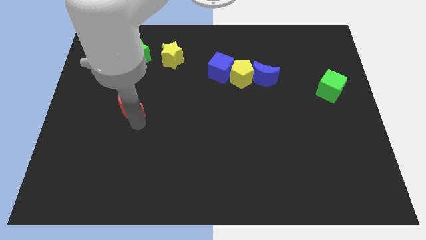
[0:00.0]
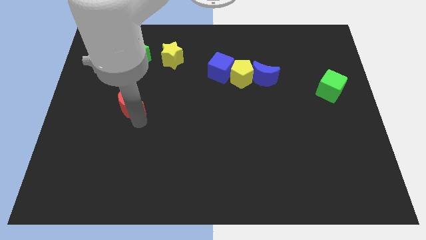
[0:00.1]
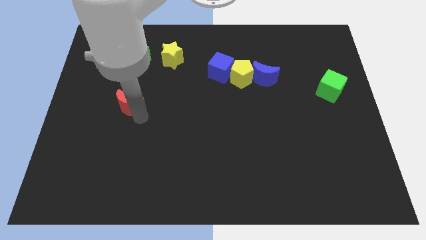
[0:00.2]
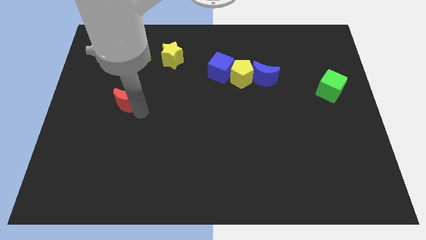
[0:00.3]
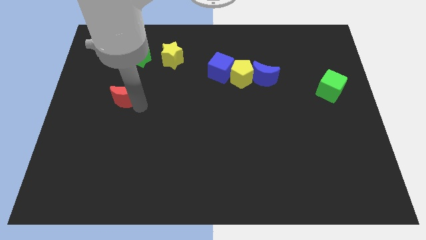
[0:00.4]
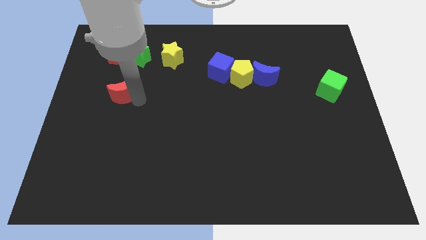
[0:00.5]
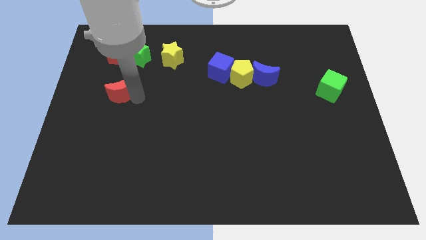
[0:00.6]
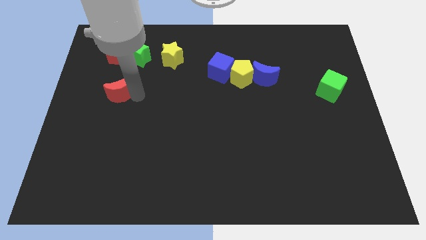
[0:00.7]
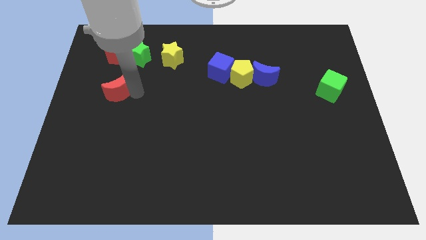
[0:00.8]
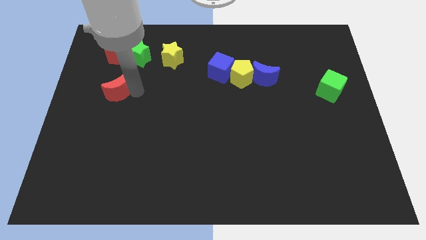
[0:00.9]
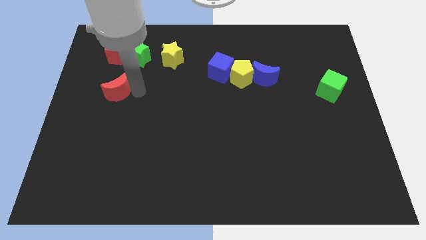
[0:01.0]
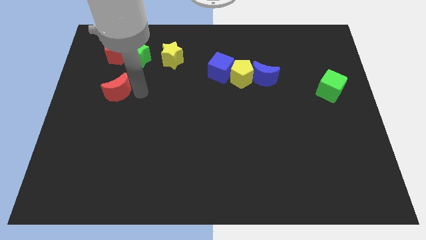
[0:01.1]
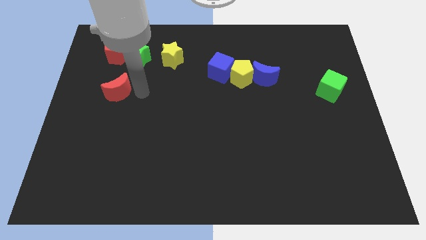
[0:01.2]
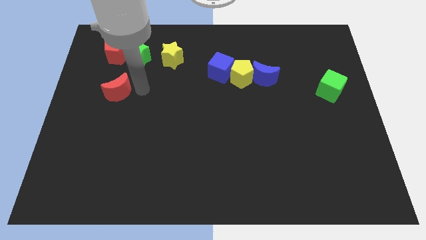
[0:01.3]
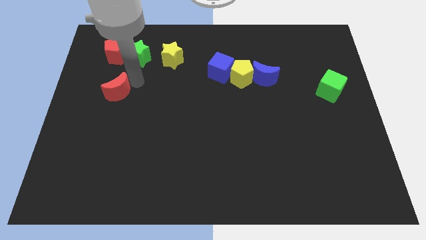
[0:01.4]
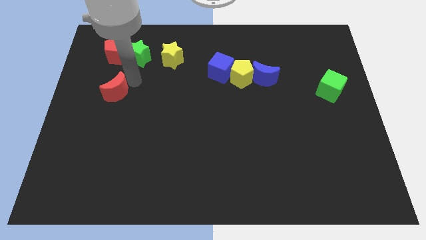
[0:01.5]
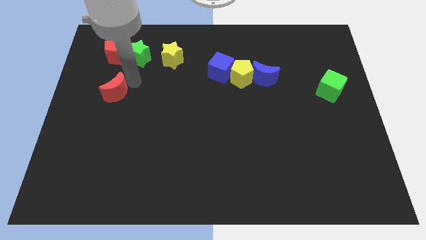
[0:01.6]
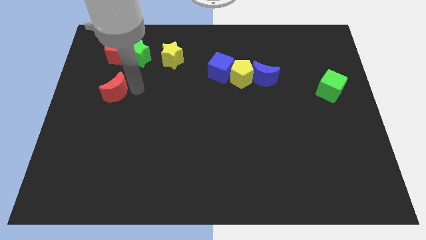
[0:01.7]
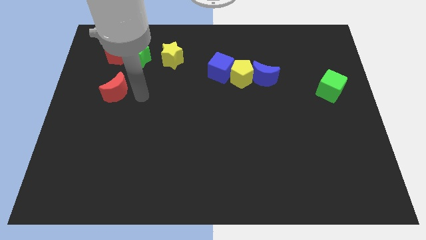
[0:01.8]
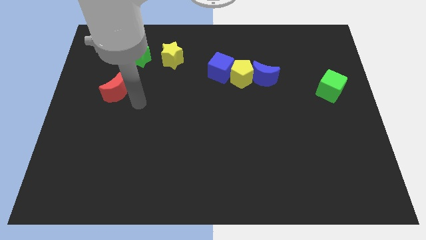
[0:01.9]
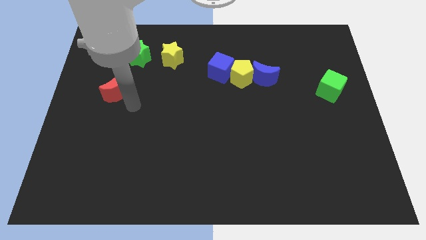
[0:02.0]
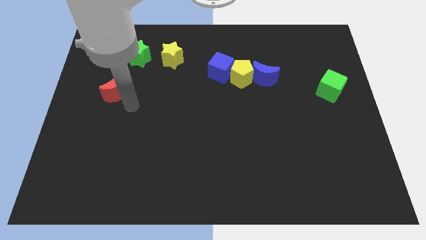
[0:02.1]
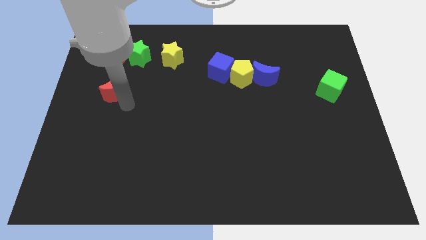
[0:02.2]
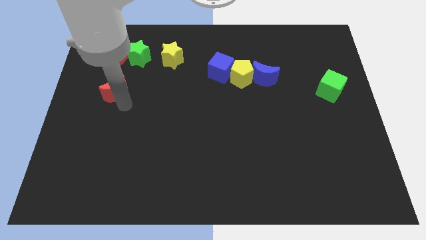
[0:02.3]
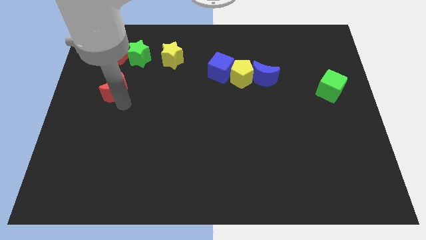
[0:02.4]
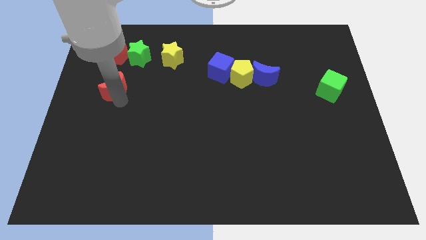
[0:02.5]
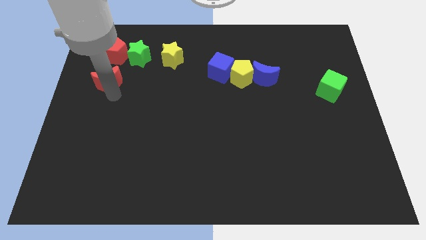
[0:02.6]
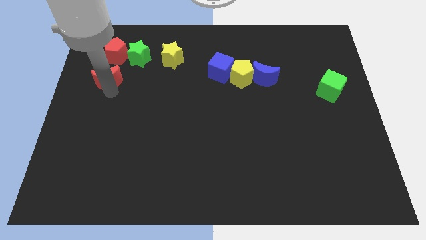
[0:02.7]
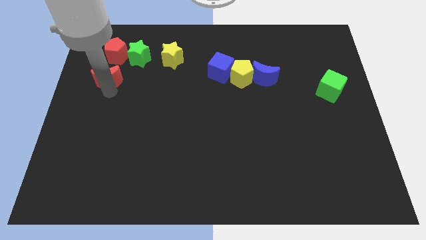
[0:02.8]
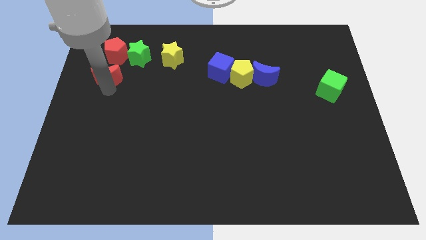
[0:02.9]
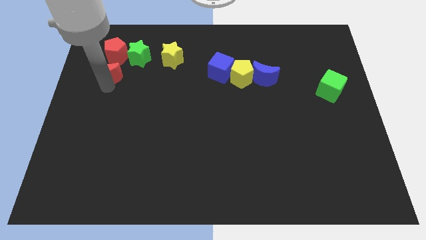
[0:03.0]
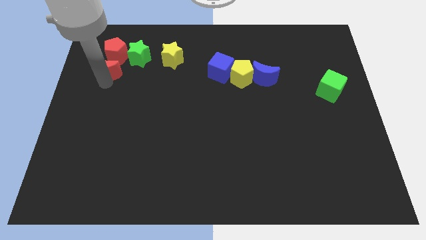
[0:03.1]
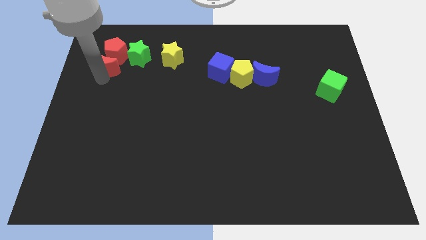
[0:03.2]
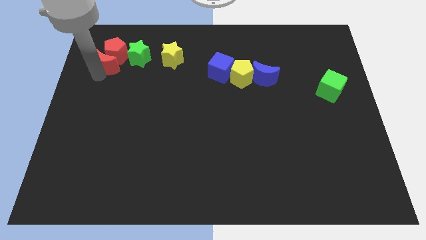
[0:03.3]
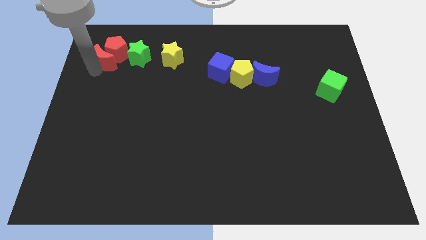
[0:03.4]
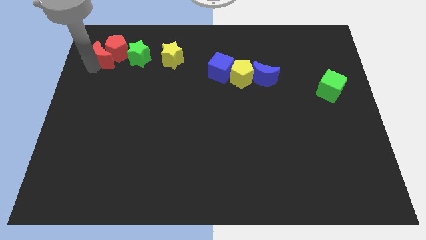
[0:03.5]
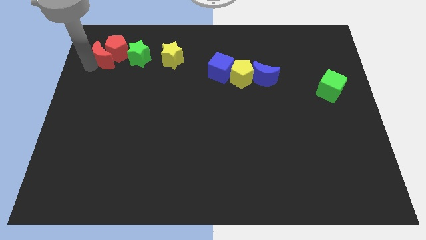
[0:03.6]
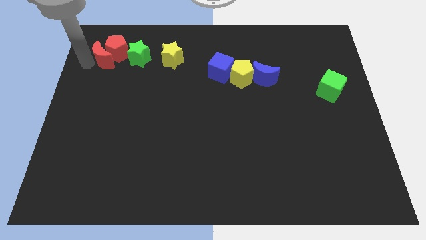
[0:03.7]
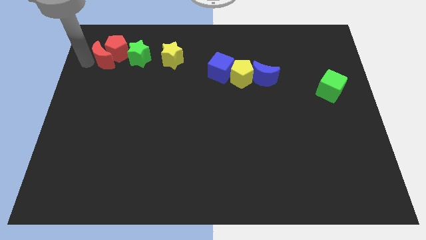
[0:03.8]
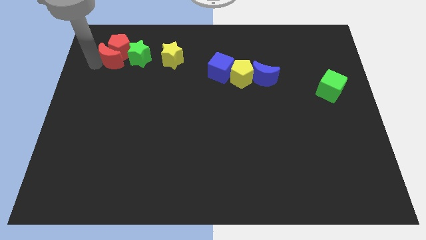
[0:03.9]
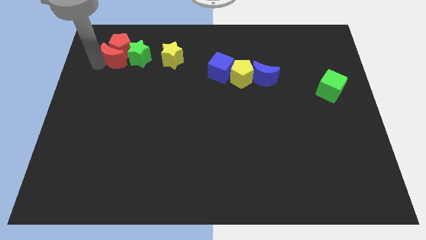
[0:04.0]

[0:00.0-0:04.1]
move red moon into red pentagon

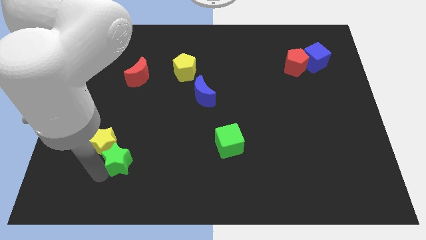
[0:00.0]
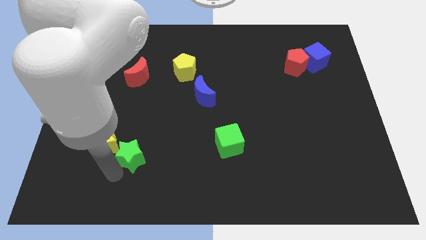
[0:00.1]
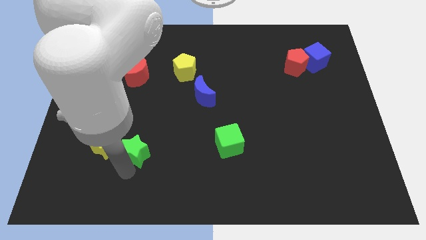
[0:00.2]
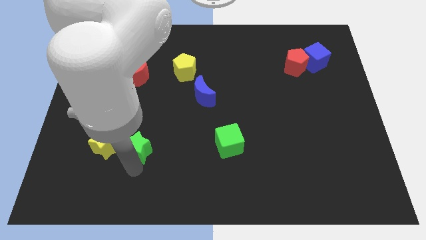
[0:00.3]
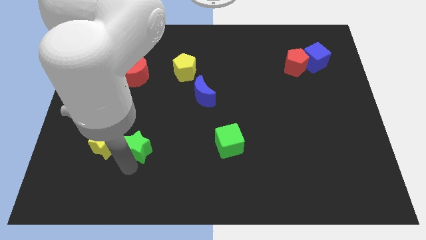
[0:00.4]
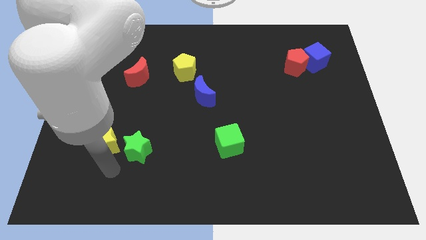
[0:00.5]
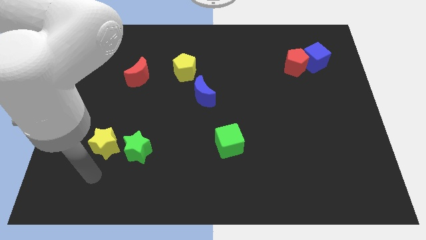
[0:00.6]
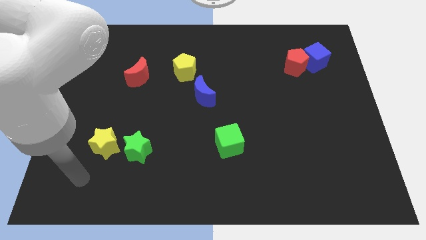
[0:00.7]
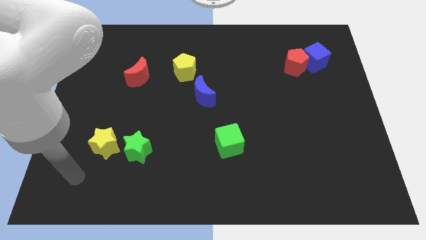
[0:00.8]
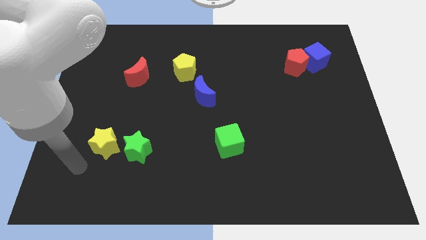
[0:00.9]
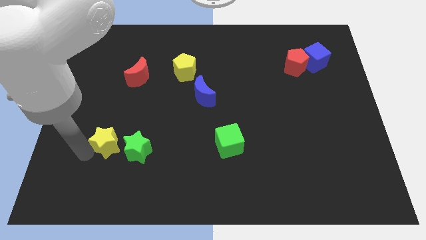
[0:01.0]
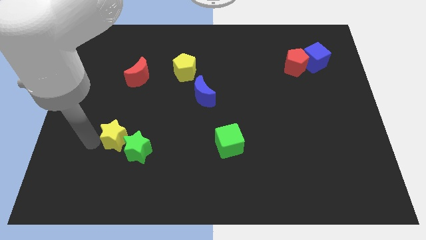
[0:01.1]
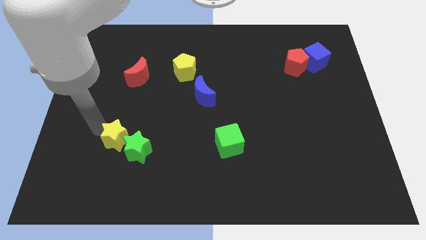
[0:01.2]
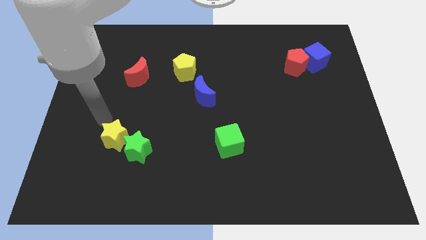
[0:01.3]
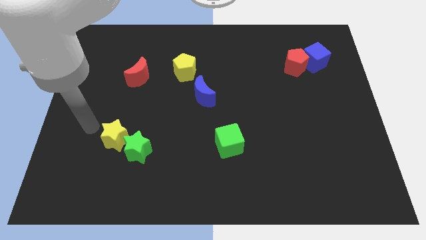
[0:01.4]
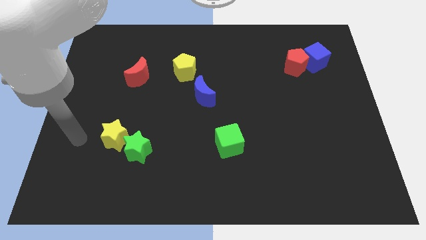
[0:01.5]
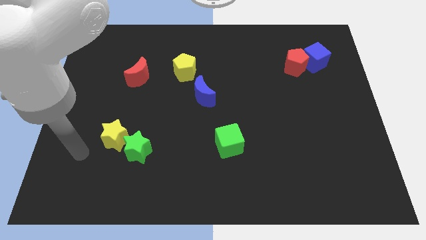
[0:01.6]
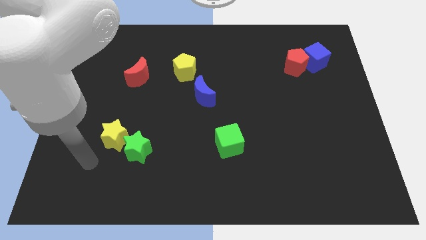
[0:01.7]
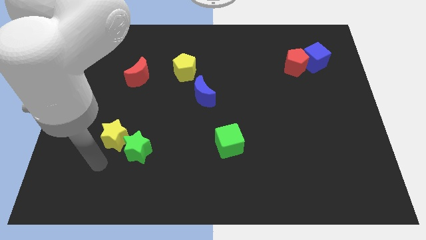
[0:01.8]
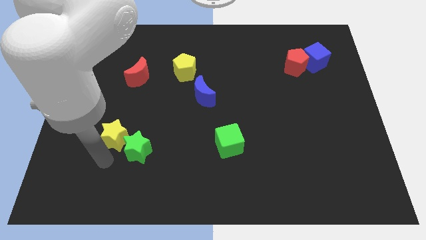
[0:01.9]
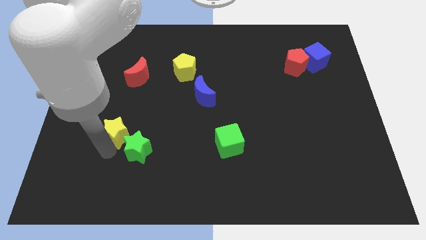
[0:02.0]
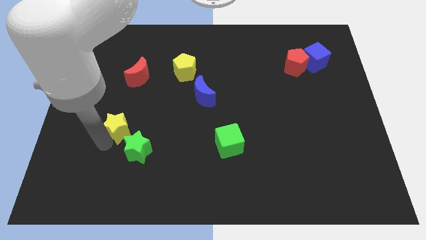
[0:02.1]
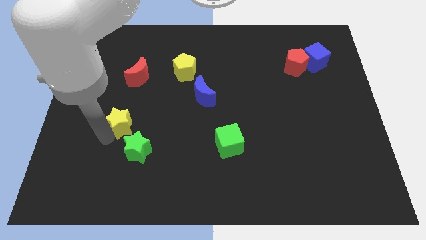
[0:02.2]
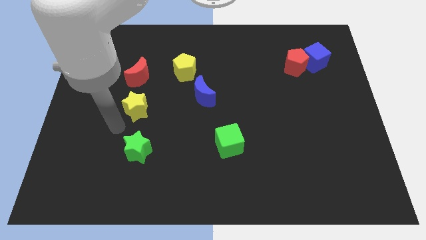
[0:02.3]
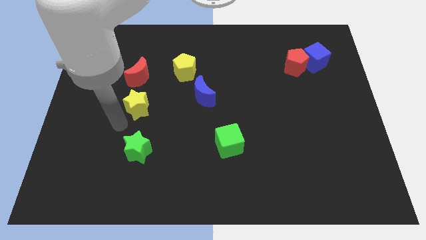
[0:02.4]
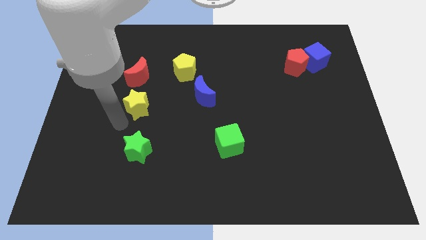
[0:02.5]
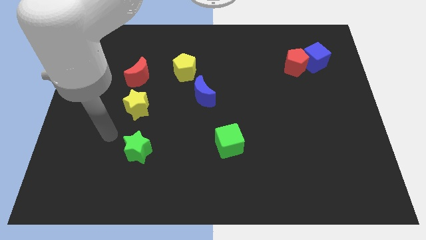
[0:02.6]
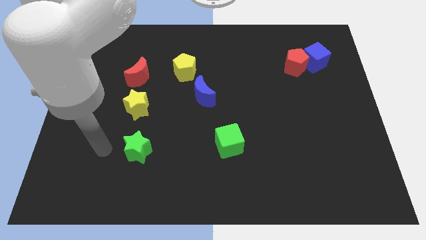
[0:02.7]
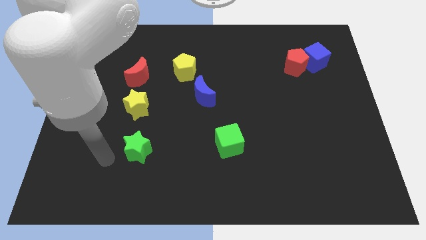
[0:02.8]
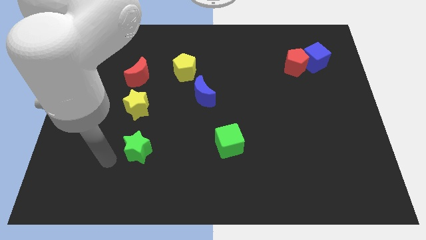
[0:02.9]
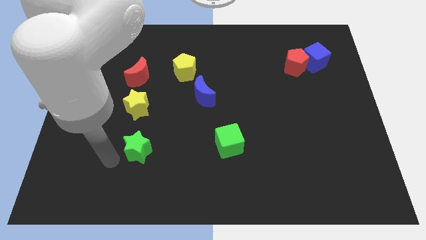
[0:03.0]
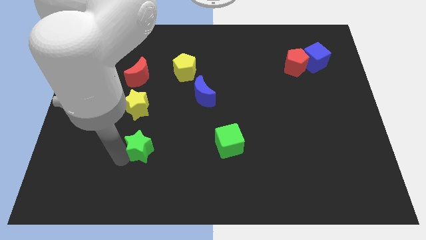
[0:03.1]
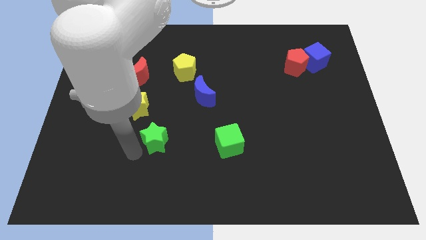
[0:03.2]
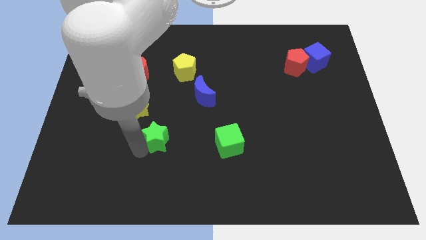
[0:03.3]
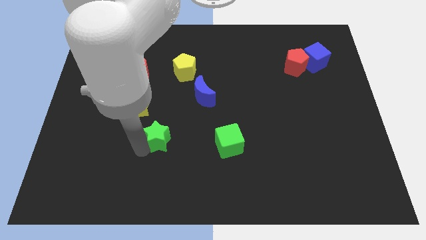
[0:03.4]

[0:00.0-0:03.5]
place the yellow star above the green star

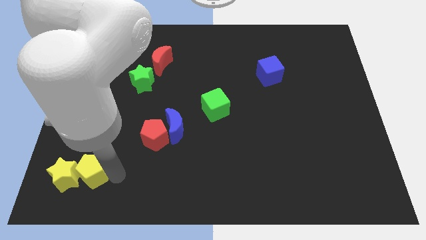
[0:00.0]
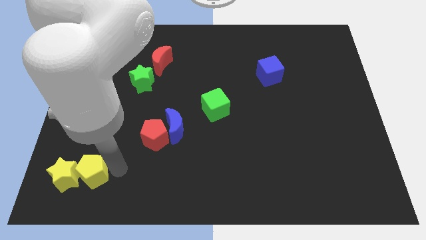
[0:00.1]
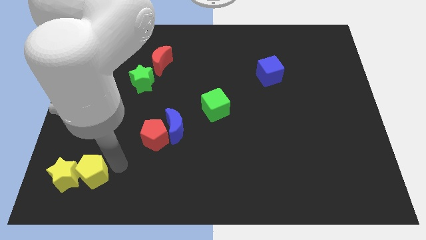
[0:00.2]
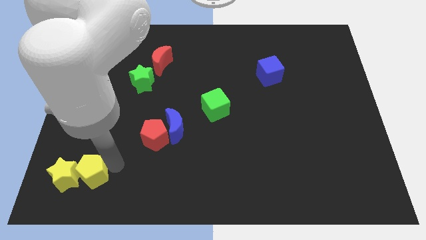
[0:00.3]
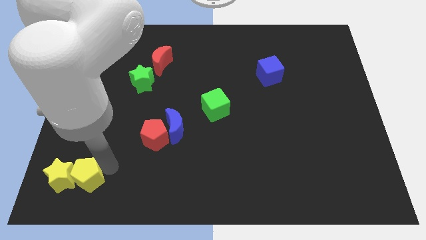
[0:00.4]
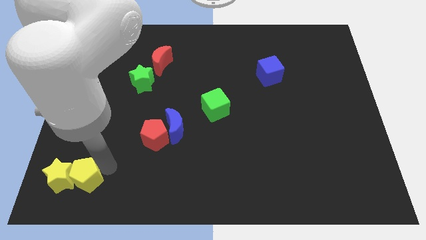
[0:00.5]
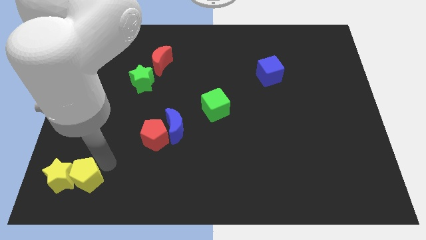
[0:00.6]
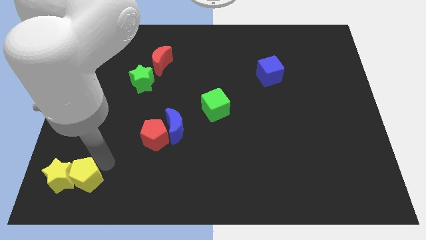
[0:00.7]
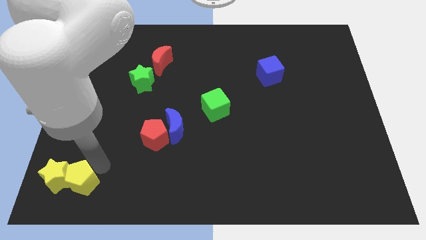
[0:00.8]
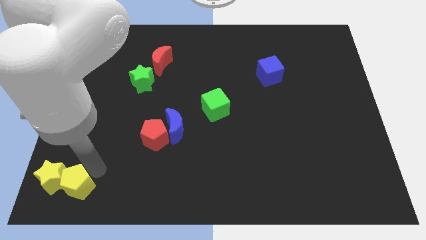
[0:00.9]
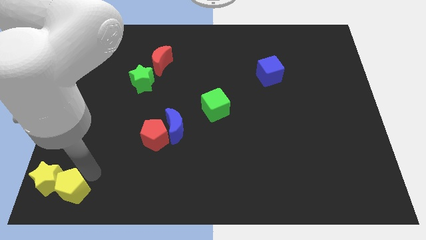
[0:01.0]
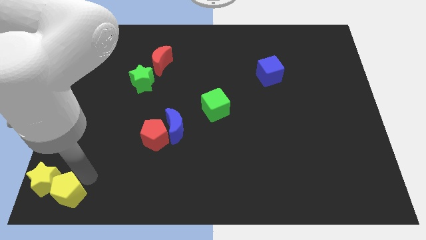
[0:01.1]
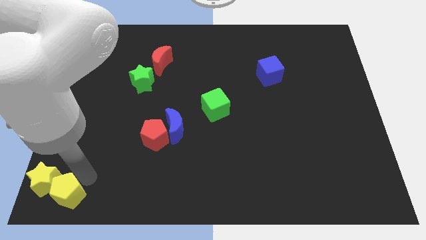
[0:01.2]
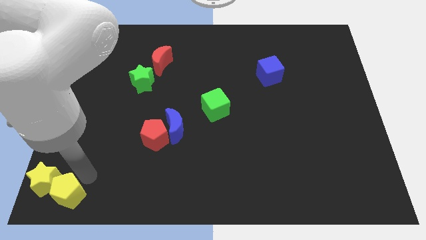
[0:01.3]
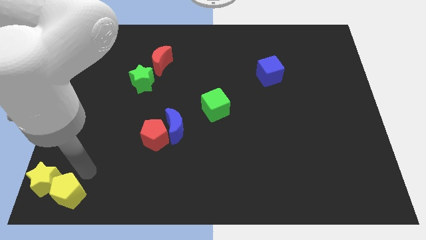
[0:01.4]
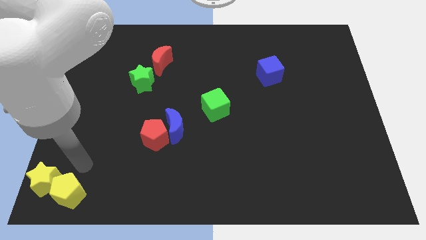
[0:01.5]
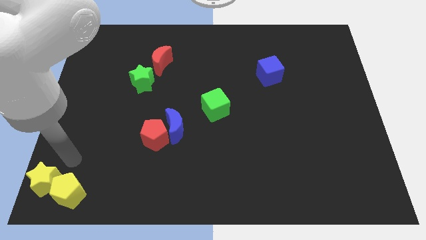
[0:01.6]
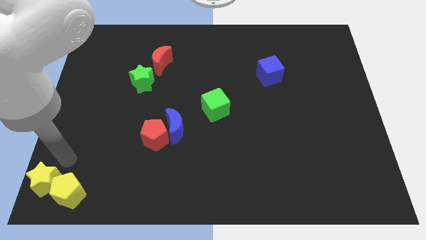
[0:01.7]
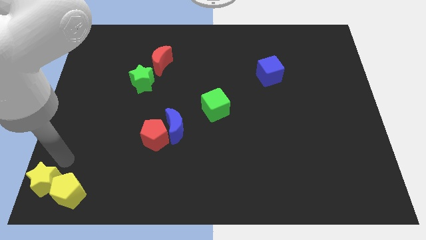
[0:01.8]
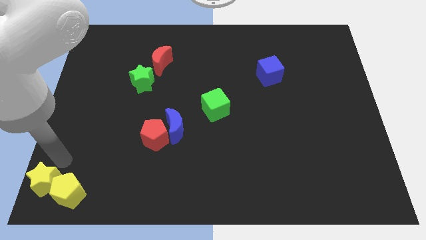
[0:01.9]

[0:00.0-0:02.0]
place the yellow blocks at the bottom left corner
